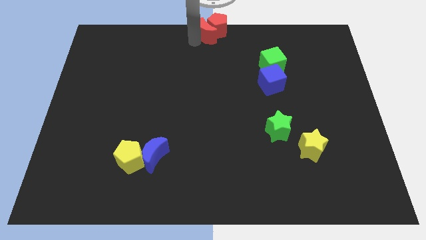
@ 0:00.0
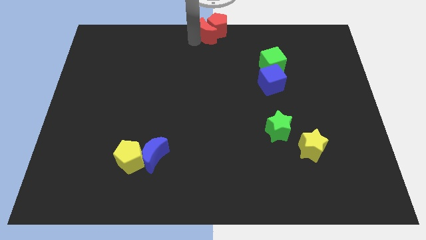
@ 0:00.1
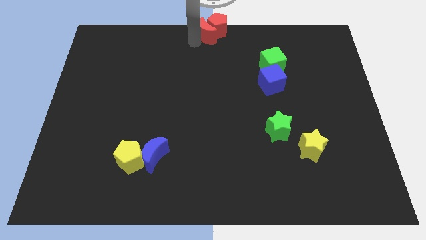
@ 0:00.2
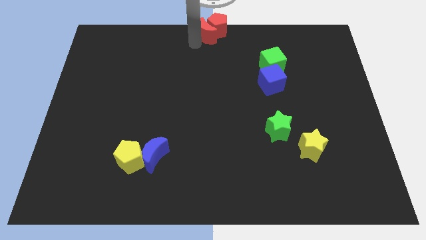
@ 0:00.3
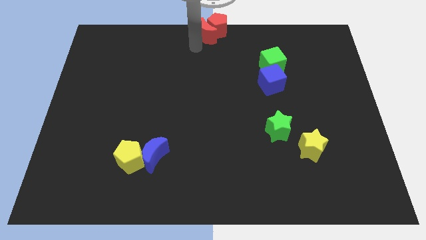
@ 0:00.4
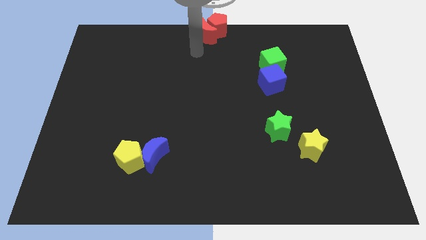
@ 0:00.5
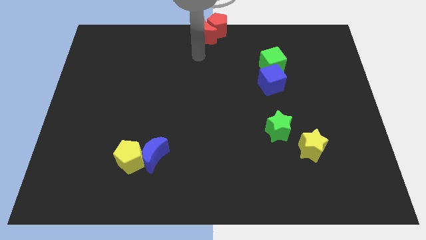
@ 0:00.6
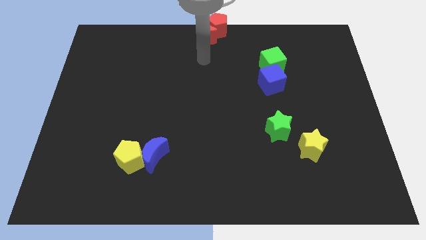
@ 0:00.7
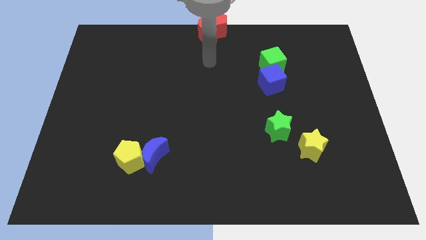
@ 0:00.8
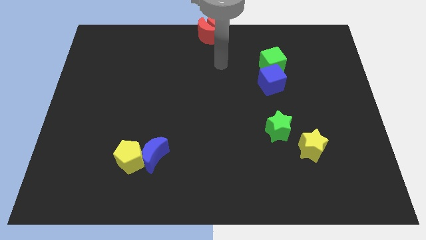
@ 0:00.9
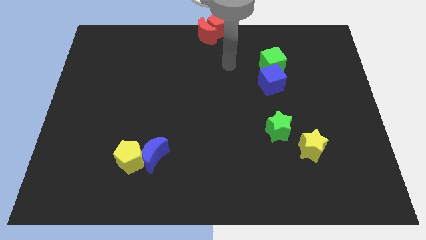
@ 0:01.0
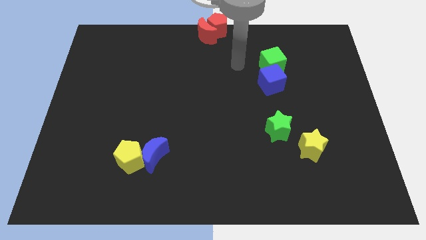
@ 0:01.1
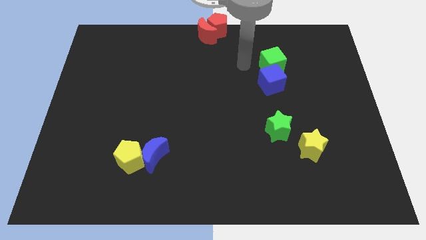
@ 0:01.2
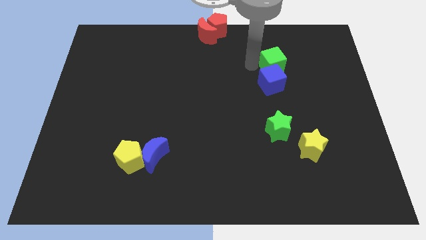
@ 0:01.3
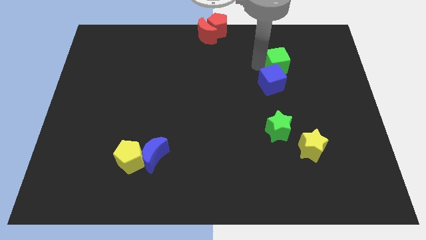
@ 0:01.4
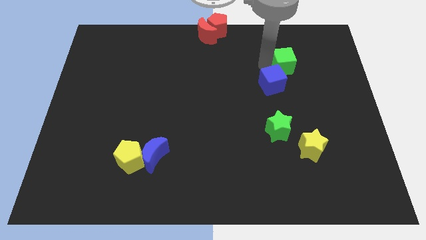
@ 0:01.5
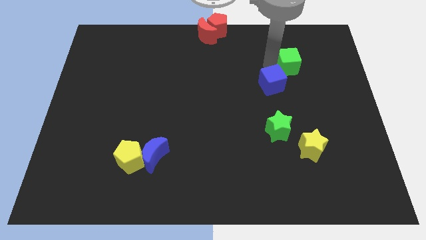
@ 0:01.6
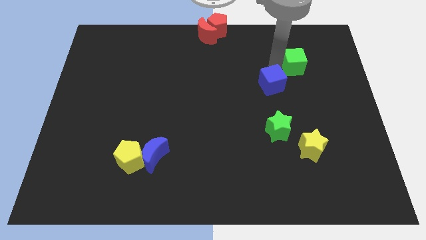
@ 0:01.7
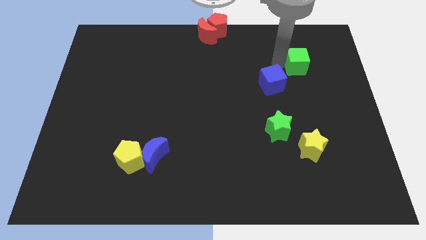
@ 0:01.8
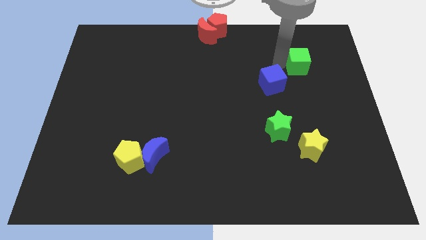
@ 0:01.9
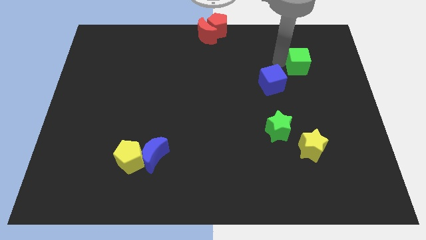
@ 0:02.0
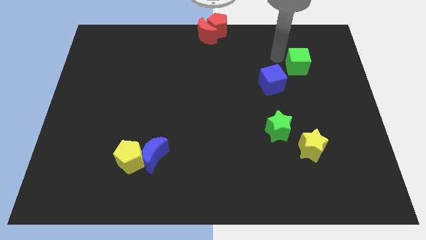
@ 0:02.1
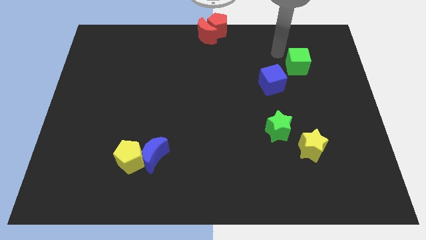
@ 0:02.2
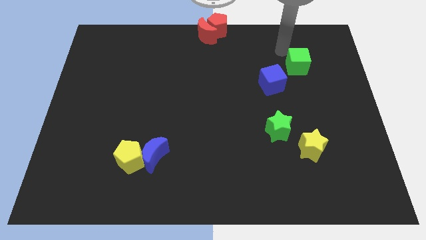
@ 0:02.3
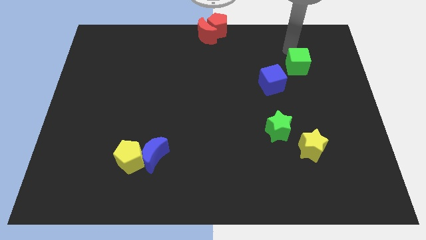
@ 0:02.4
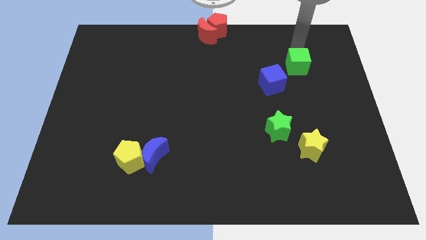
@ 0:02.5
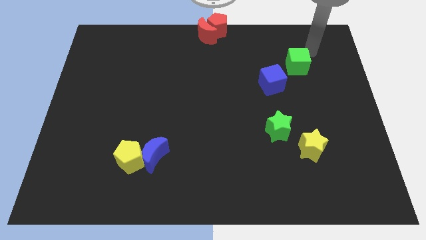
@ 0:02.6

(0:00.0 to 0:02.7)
push the green cube away from the blue cube

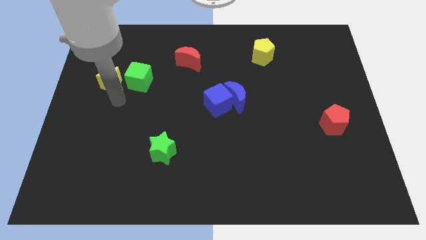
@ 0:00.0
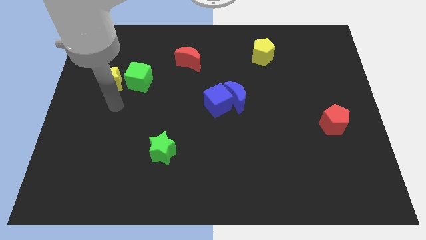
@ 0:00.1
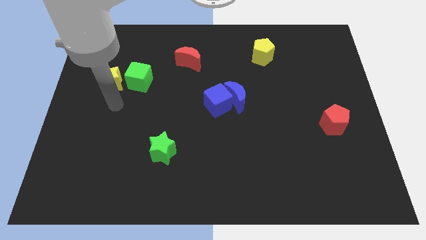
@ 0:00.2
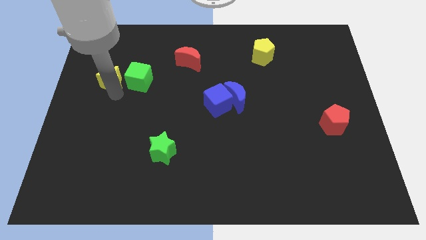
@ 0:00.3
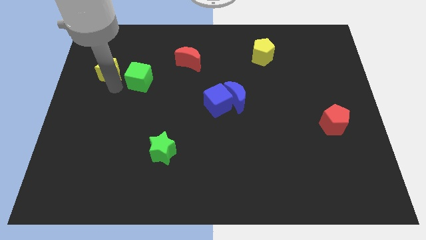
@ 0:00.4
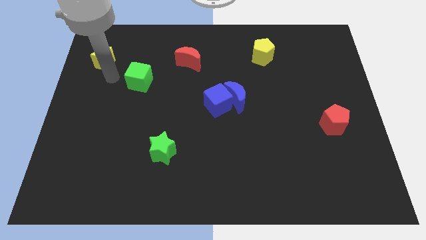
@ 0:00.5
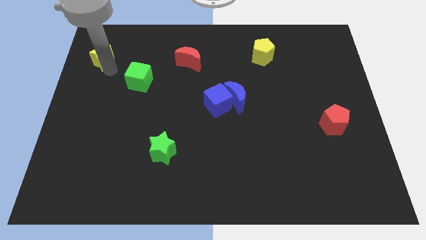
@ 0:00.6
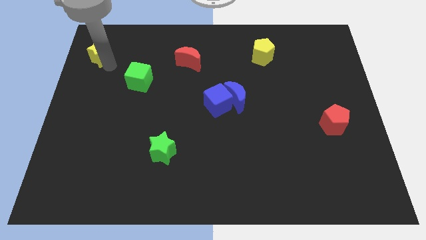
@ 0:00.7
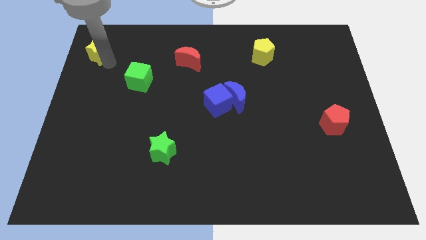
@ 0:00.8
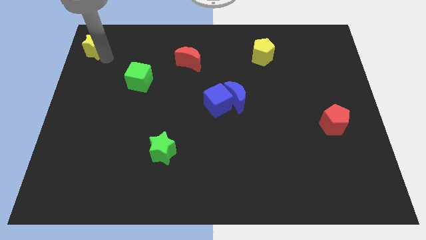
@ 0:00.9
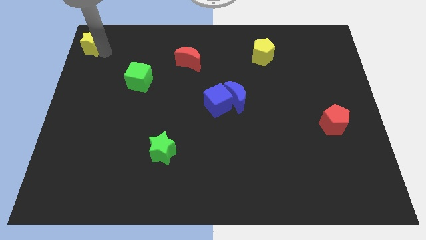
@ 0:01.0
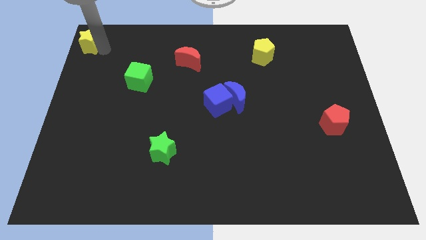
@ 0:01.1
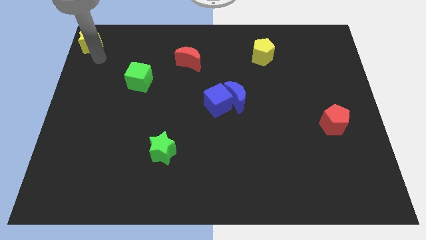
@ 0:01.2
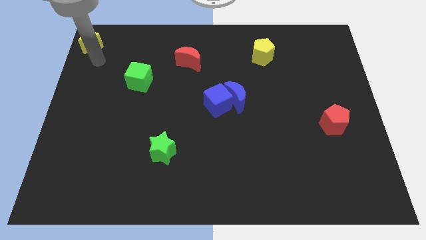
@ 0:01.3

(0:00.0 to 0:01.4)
move yellow star to the top left corner of the board

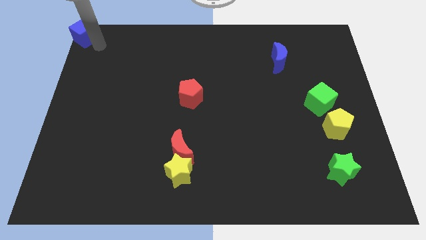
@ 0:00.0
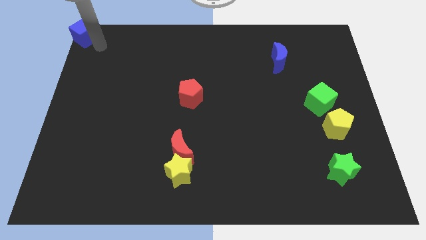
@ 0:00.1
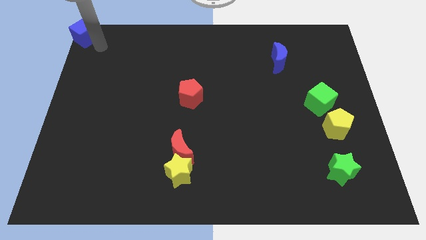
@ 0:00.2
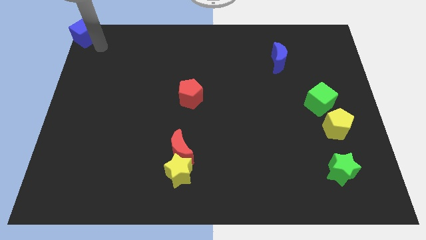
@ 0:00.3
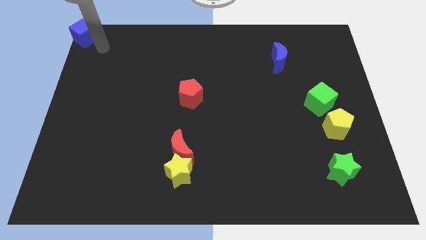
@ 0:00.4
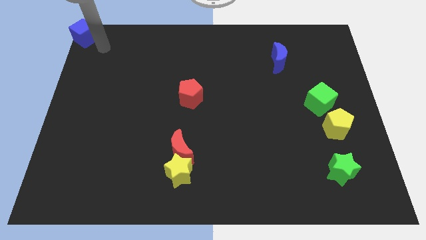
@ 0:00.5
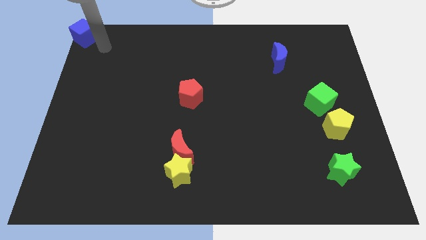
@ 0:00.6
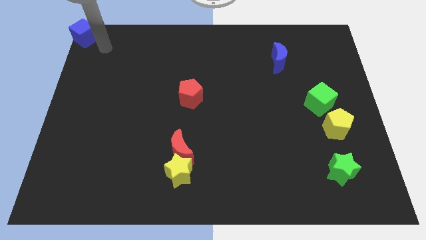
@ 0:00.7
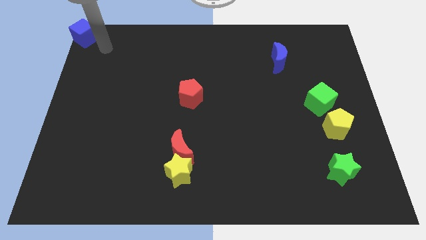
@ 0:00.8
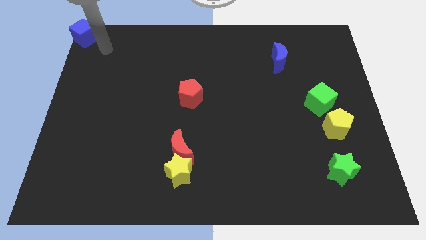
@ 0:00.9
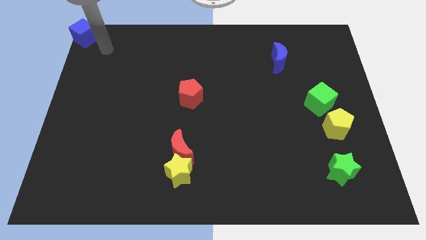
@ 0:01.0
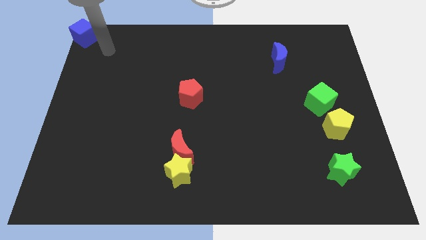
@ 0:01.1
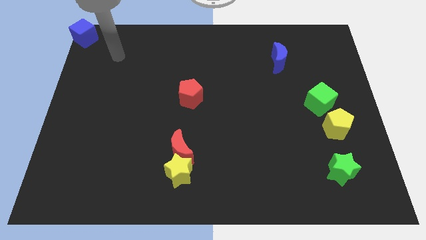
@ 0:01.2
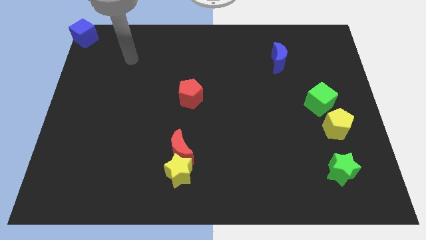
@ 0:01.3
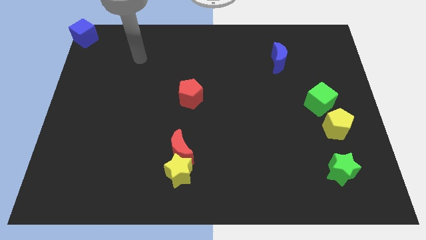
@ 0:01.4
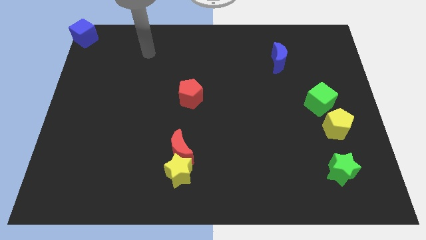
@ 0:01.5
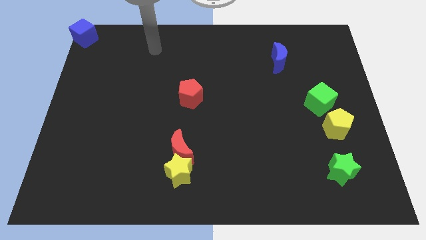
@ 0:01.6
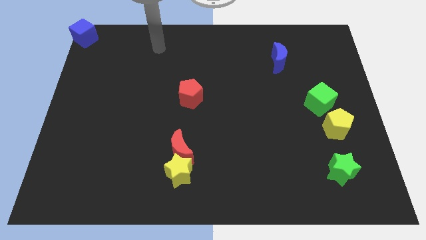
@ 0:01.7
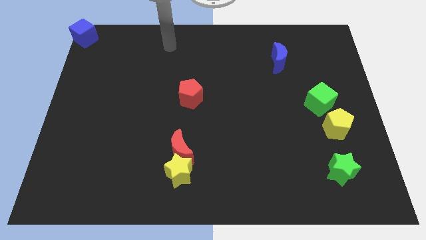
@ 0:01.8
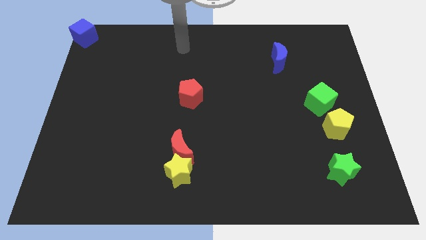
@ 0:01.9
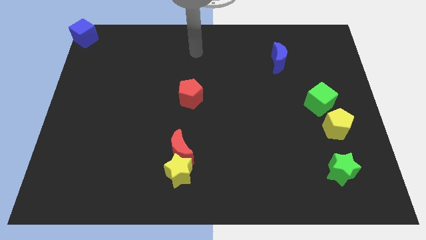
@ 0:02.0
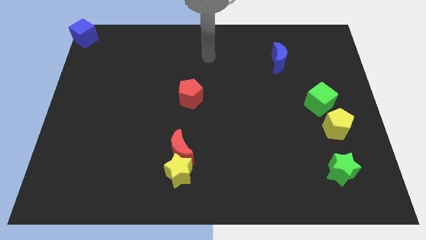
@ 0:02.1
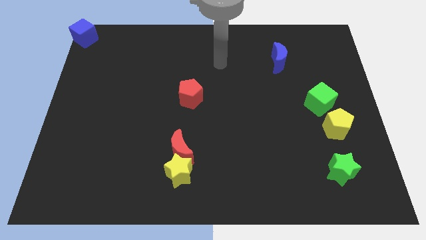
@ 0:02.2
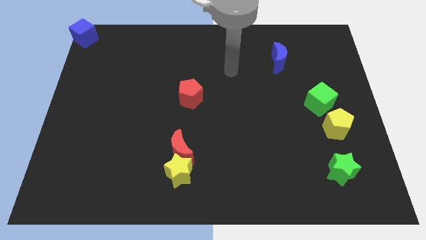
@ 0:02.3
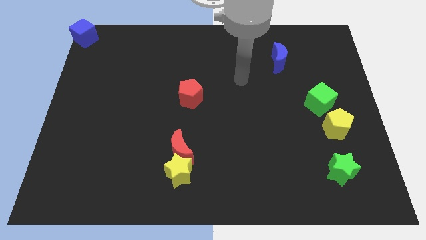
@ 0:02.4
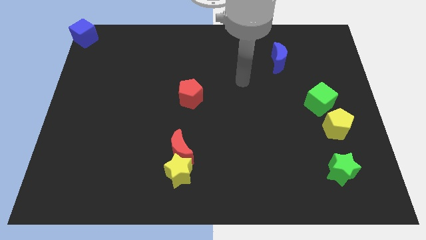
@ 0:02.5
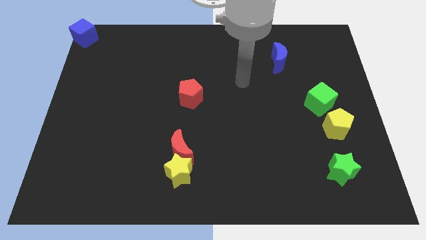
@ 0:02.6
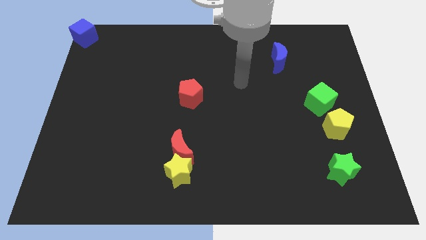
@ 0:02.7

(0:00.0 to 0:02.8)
move away from the blue cube

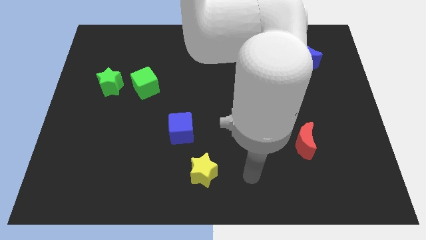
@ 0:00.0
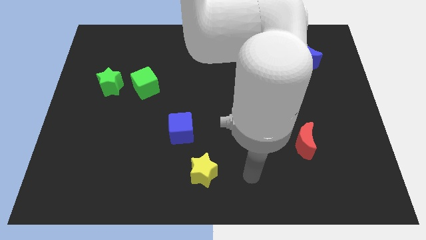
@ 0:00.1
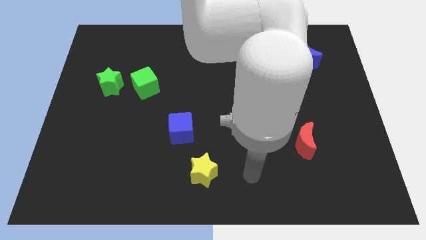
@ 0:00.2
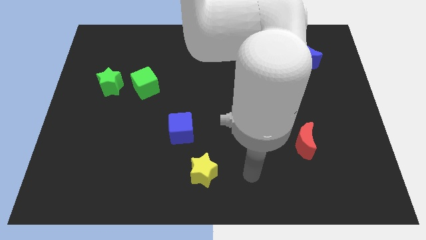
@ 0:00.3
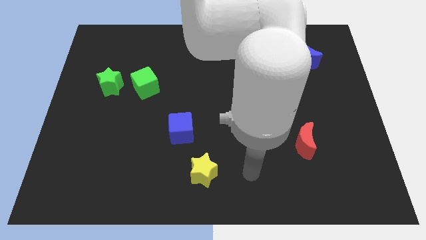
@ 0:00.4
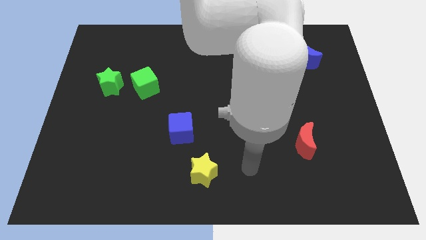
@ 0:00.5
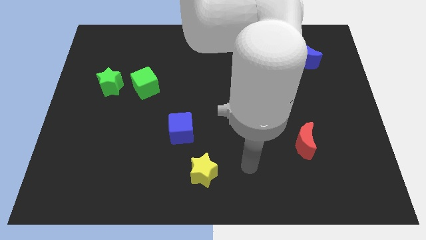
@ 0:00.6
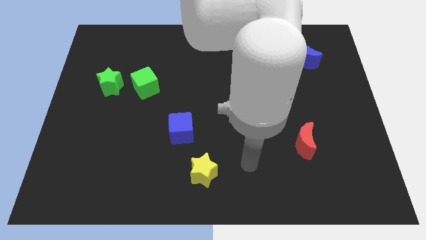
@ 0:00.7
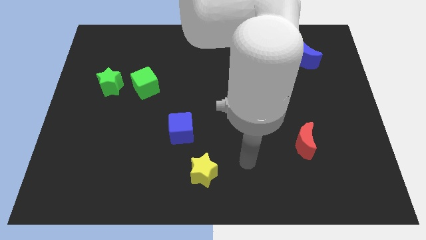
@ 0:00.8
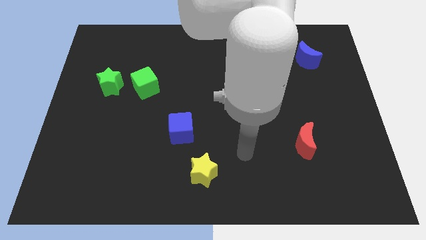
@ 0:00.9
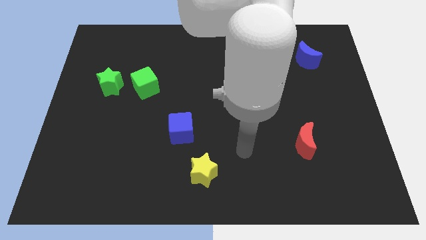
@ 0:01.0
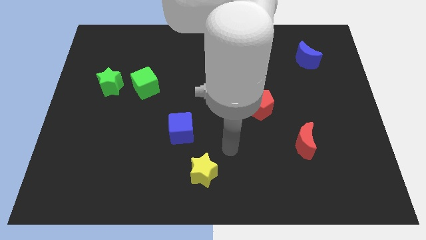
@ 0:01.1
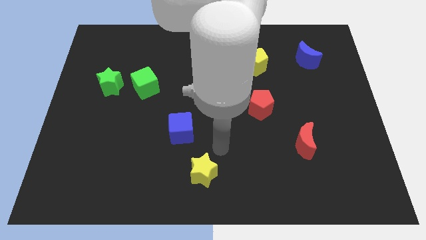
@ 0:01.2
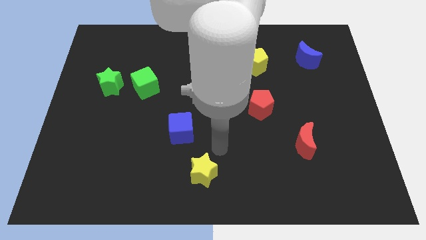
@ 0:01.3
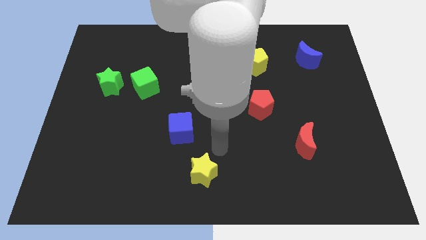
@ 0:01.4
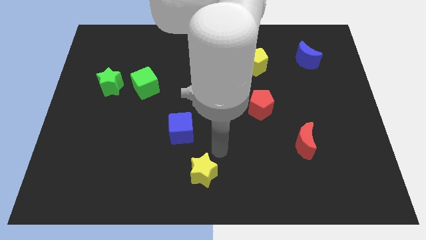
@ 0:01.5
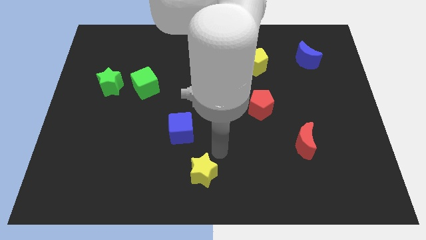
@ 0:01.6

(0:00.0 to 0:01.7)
place your arm to the top of yellow star

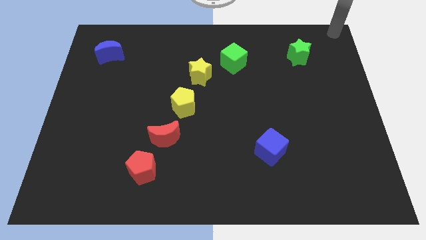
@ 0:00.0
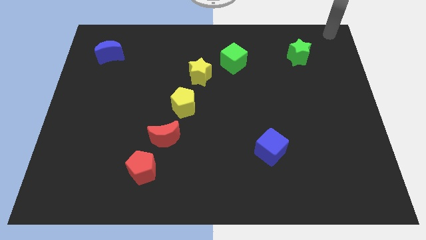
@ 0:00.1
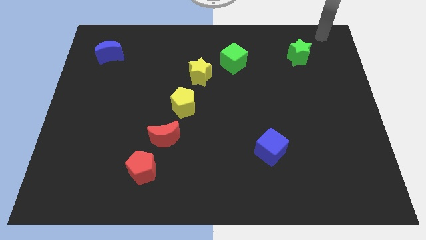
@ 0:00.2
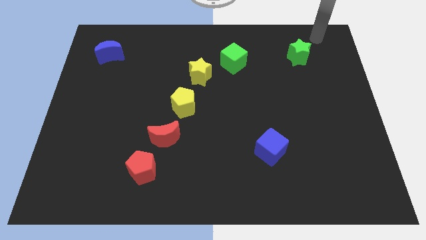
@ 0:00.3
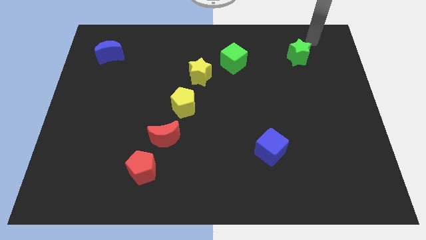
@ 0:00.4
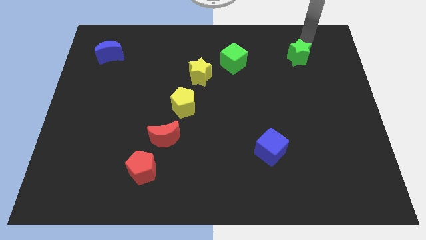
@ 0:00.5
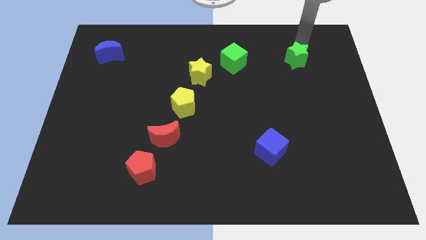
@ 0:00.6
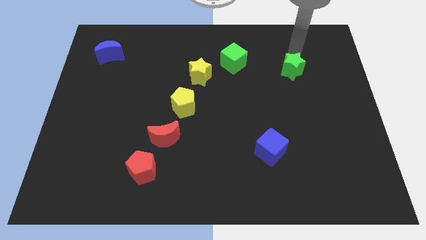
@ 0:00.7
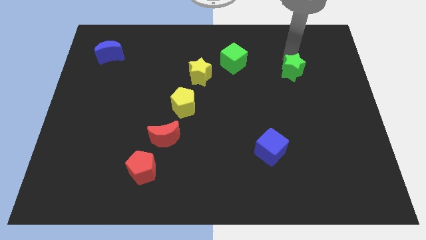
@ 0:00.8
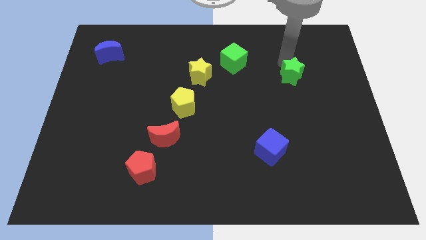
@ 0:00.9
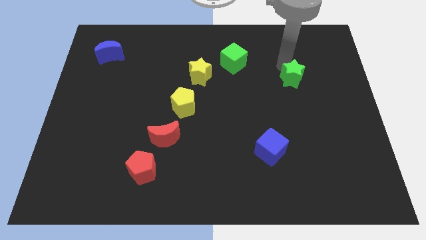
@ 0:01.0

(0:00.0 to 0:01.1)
push green star to the right of yellow star
